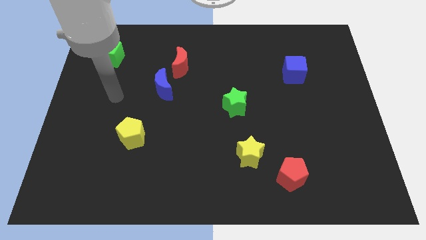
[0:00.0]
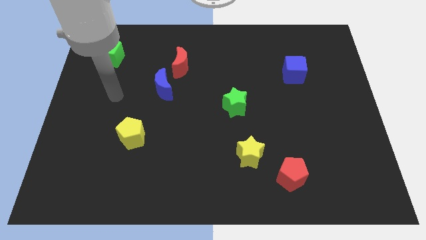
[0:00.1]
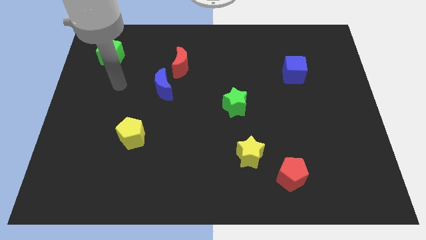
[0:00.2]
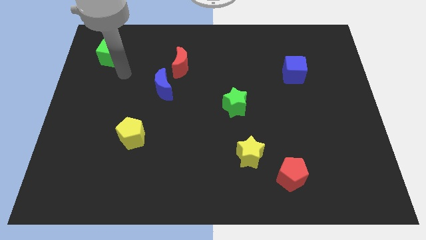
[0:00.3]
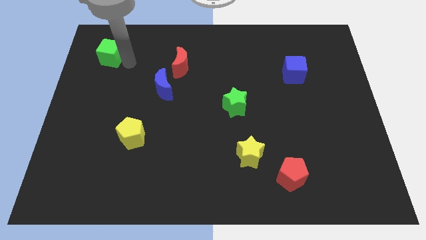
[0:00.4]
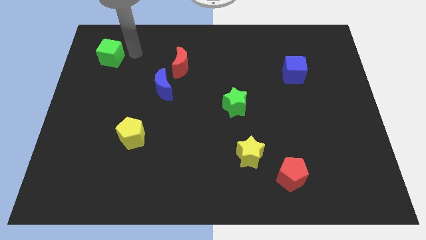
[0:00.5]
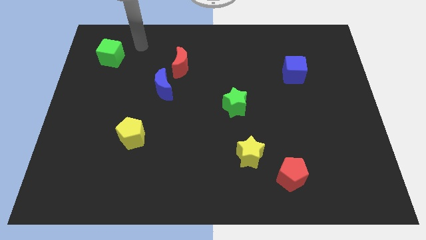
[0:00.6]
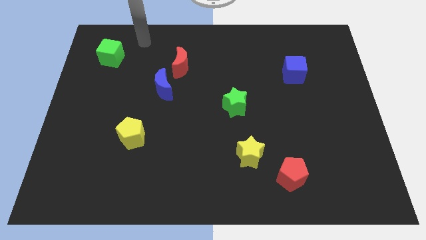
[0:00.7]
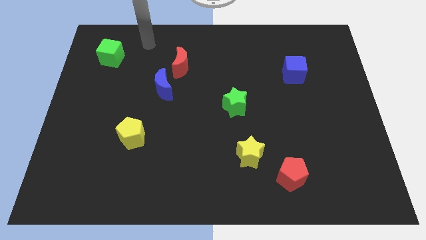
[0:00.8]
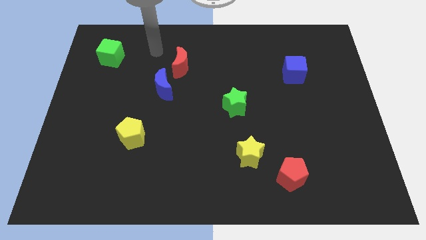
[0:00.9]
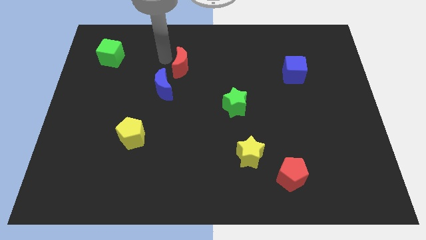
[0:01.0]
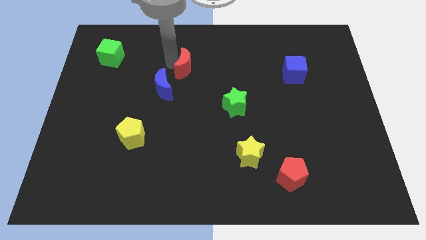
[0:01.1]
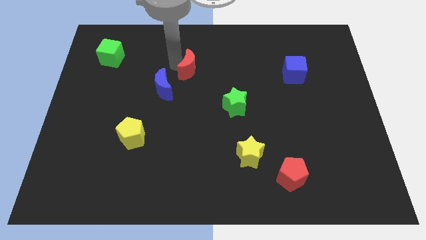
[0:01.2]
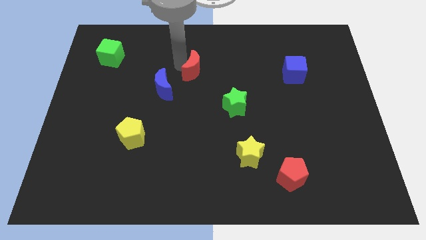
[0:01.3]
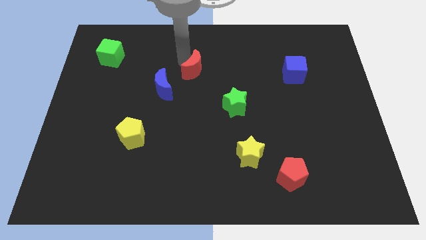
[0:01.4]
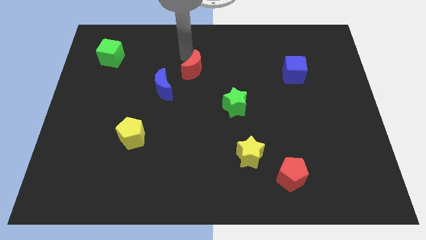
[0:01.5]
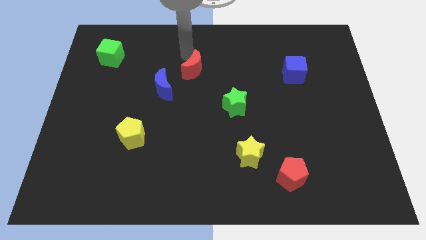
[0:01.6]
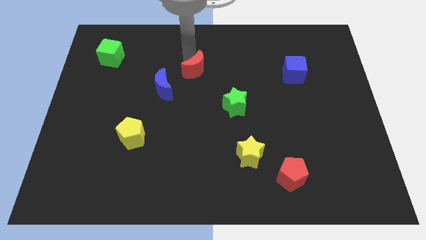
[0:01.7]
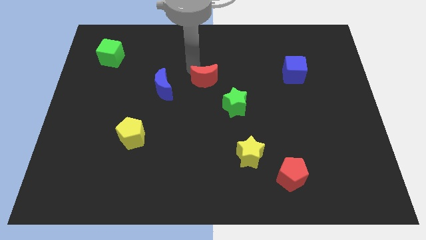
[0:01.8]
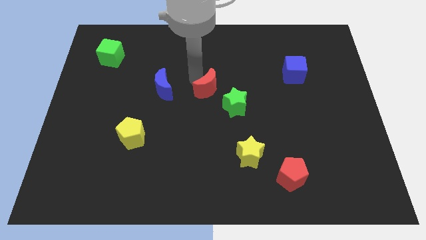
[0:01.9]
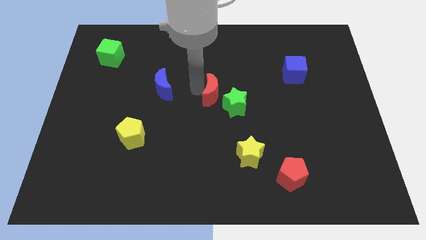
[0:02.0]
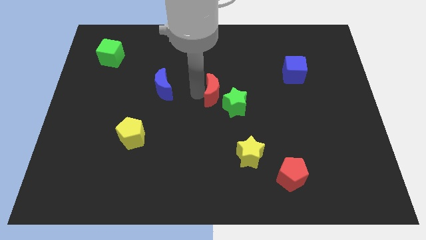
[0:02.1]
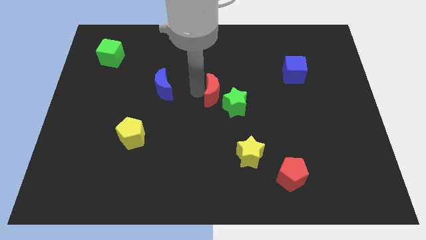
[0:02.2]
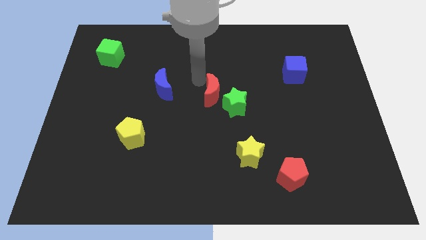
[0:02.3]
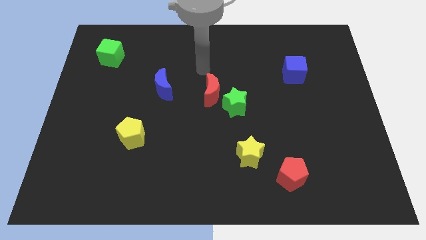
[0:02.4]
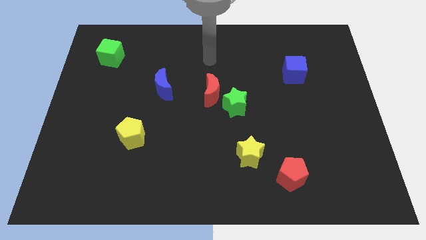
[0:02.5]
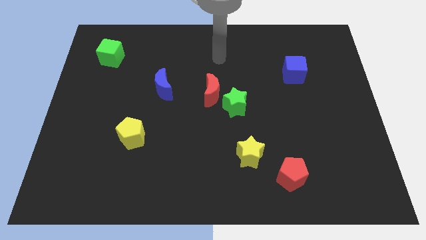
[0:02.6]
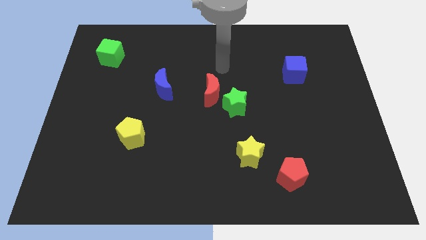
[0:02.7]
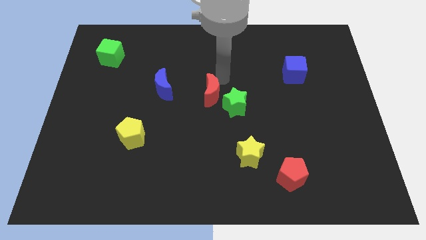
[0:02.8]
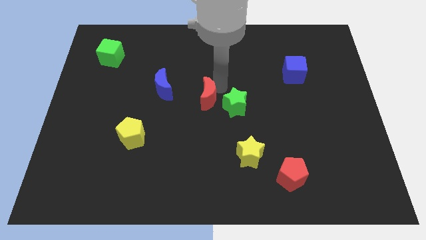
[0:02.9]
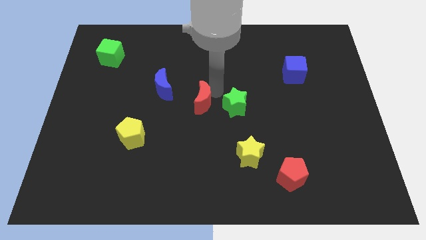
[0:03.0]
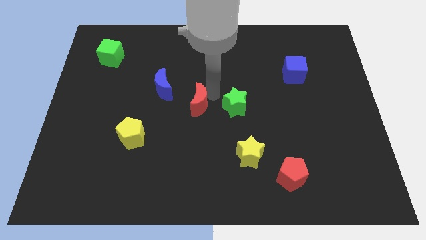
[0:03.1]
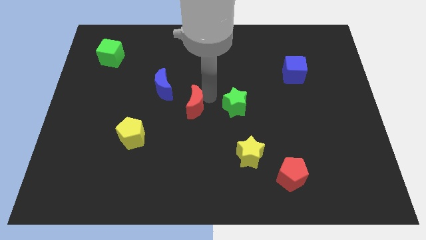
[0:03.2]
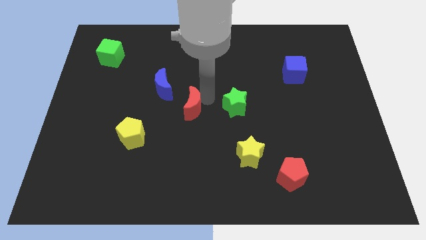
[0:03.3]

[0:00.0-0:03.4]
place the red moon left to the green star

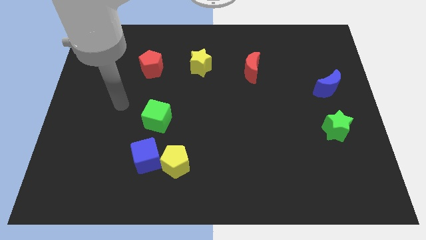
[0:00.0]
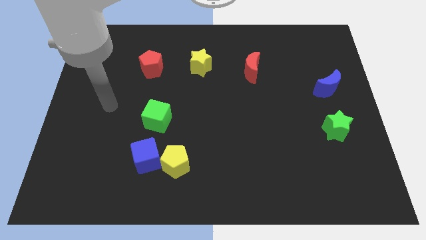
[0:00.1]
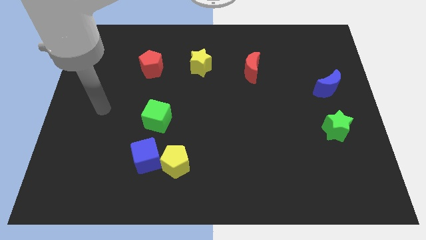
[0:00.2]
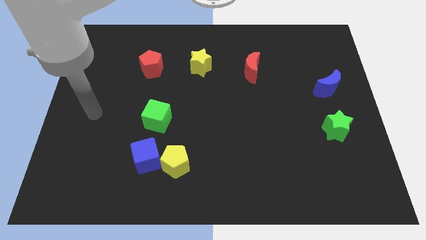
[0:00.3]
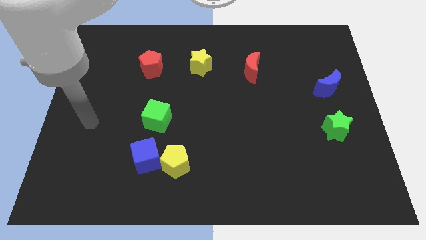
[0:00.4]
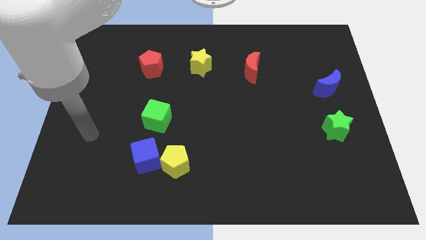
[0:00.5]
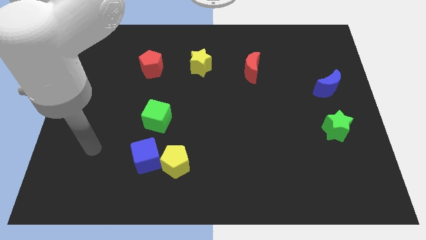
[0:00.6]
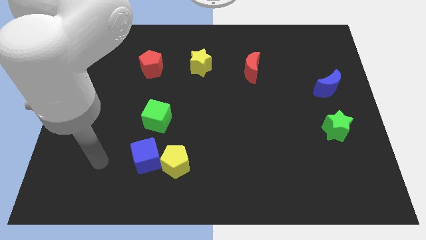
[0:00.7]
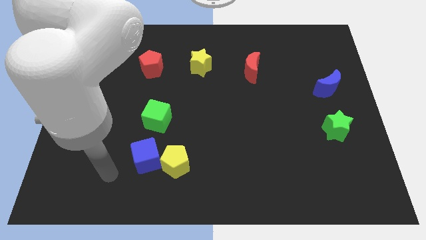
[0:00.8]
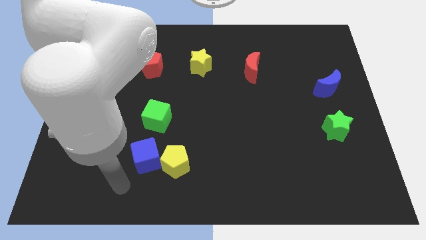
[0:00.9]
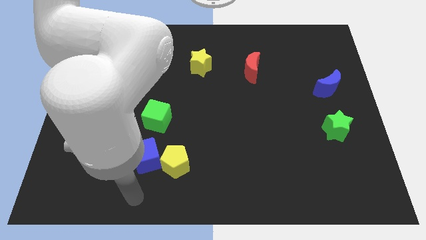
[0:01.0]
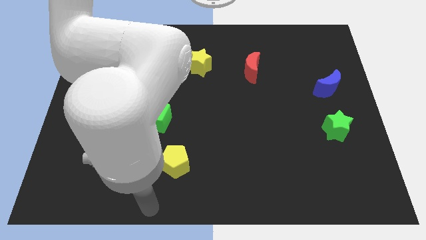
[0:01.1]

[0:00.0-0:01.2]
move your hand towards the bottom side

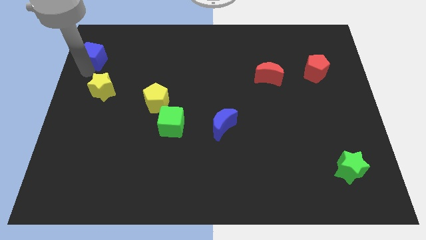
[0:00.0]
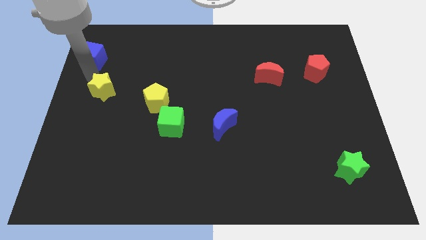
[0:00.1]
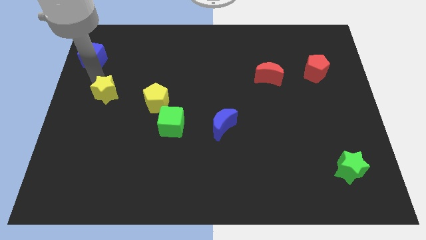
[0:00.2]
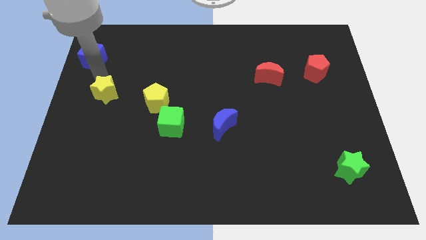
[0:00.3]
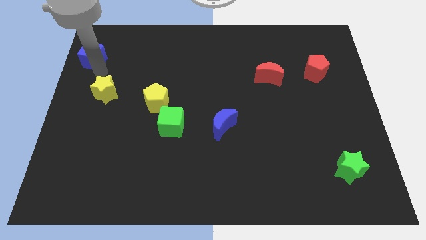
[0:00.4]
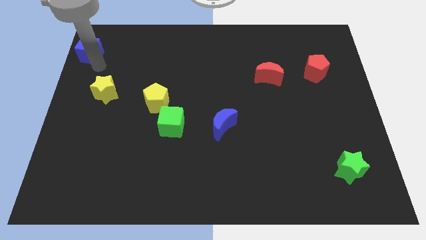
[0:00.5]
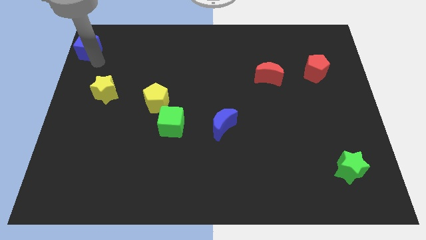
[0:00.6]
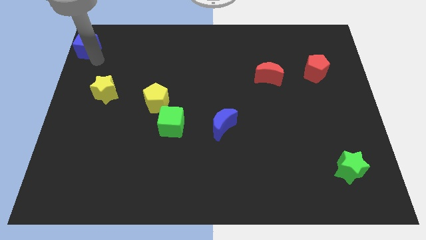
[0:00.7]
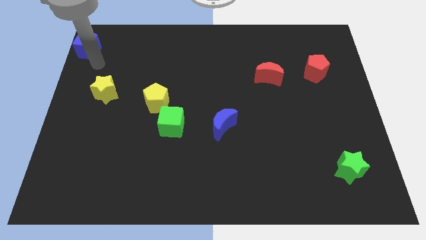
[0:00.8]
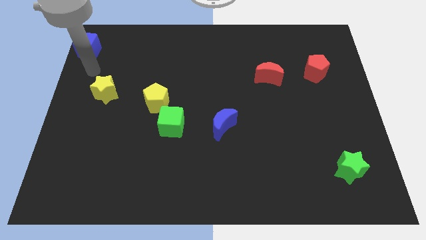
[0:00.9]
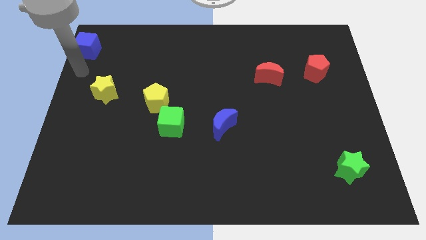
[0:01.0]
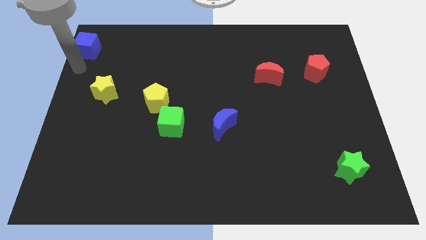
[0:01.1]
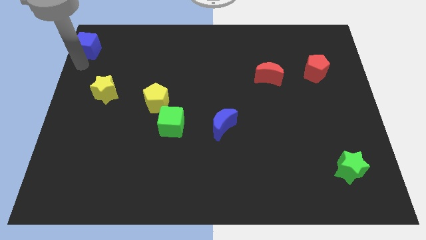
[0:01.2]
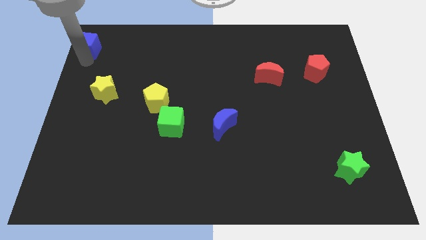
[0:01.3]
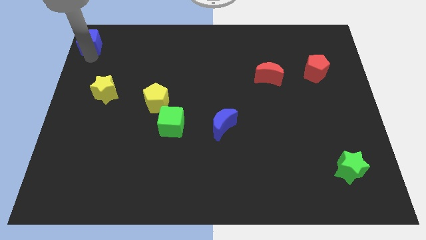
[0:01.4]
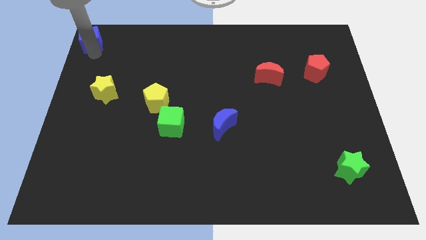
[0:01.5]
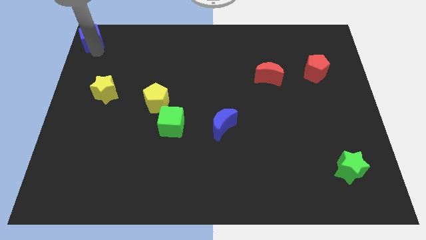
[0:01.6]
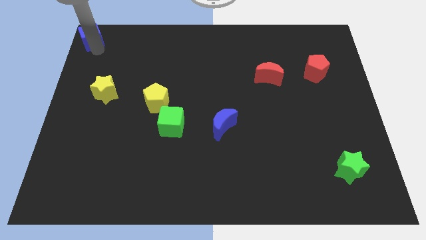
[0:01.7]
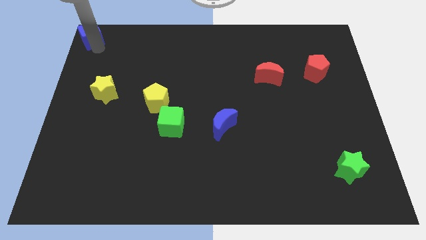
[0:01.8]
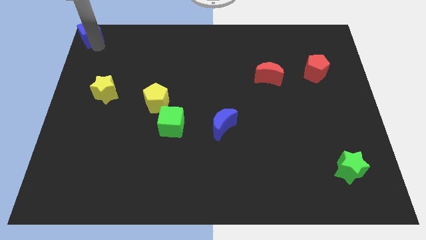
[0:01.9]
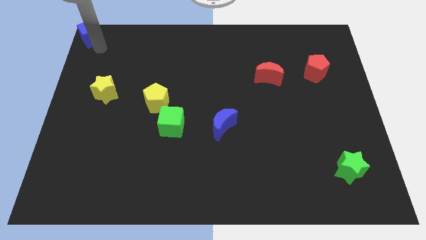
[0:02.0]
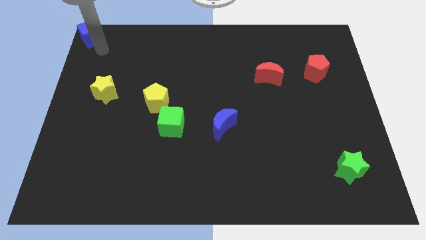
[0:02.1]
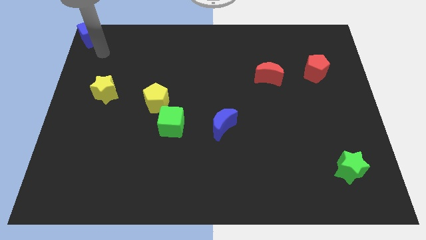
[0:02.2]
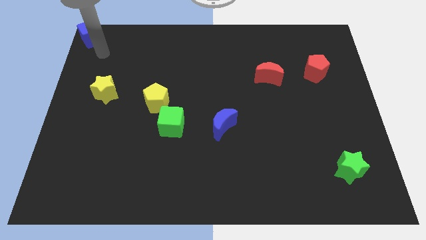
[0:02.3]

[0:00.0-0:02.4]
push the blue cube to the top left corner

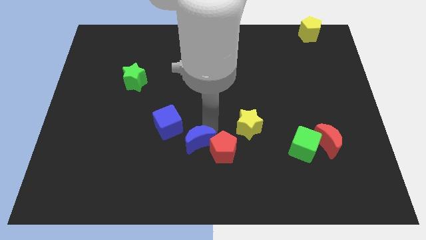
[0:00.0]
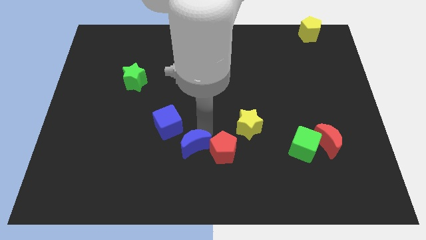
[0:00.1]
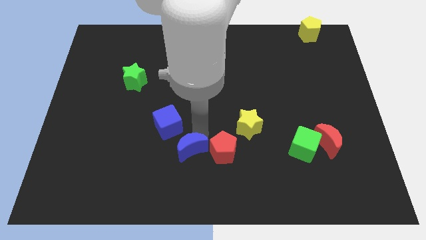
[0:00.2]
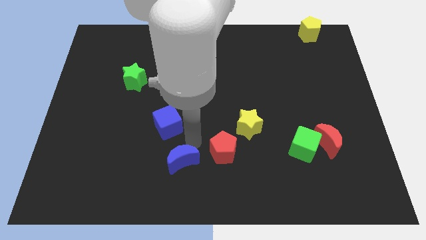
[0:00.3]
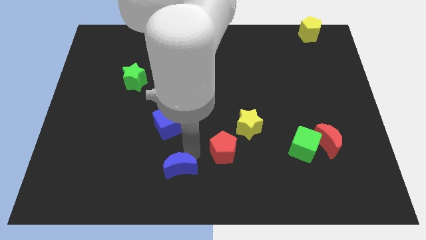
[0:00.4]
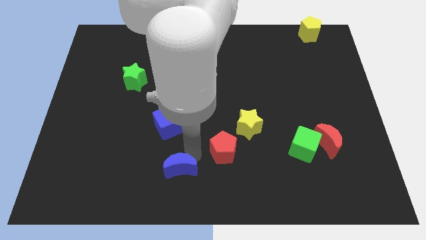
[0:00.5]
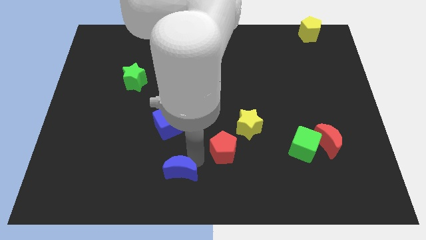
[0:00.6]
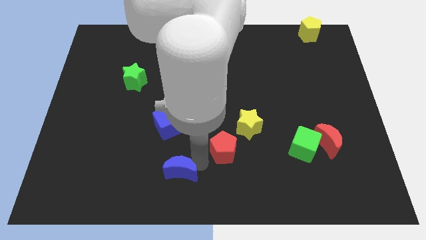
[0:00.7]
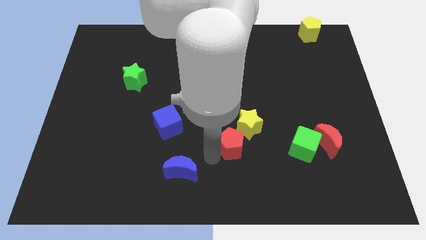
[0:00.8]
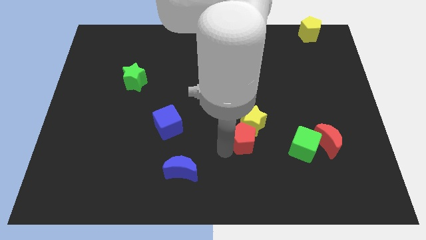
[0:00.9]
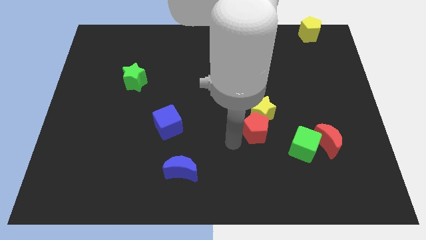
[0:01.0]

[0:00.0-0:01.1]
push red pentagon below to the yellow star

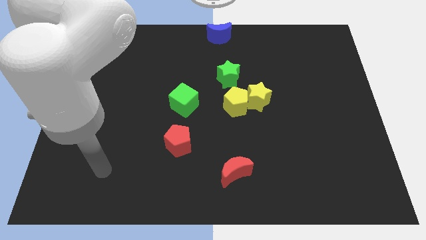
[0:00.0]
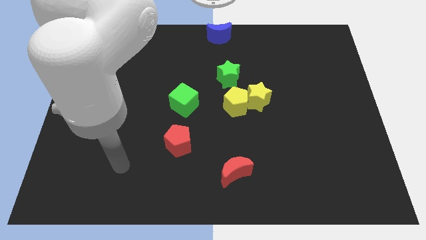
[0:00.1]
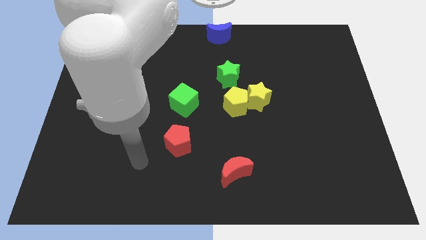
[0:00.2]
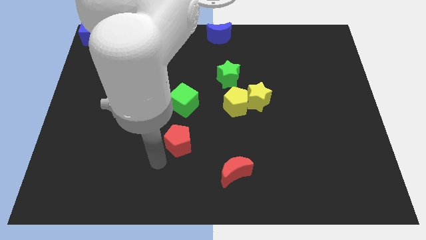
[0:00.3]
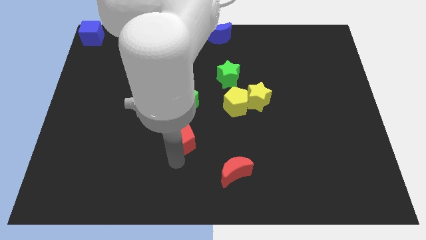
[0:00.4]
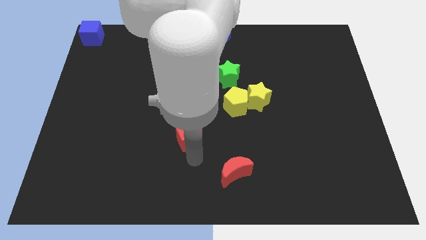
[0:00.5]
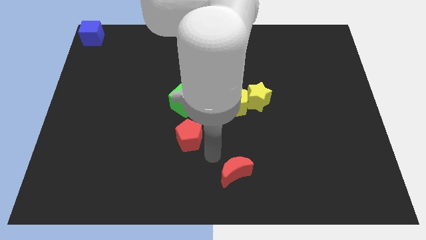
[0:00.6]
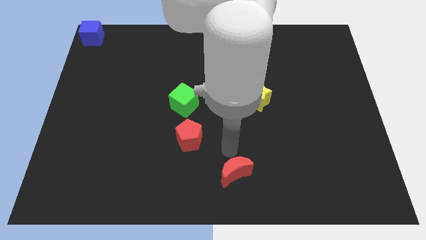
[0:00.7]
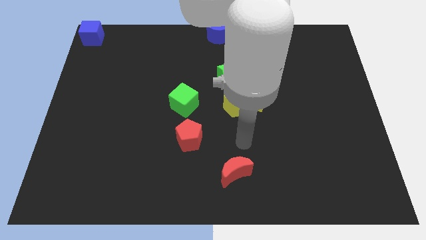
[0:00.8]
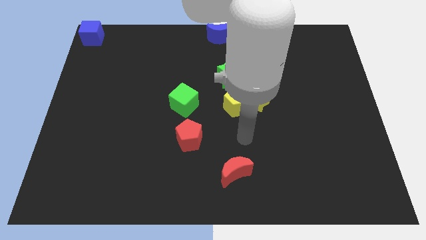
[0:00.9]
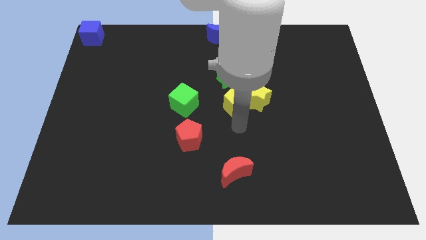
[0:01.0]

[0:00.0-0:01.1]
slightly push the red pentagon towards the center of the board
